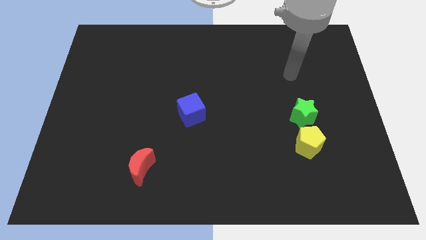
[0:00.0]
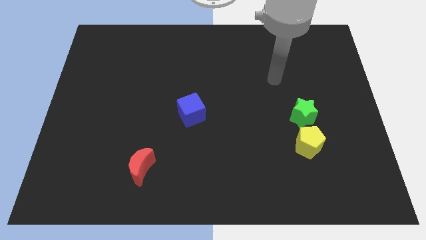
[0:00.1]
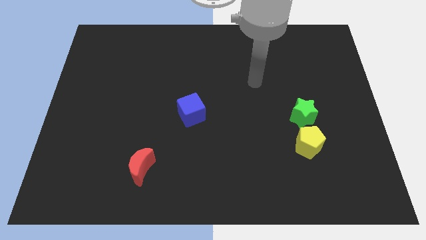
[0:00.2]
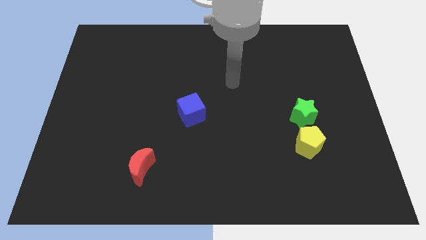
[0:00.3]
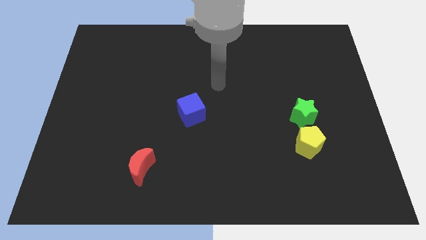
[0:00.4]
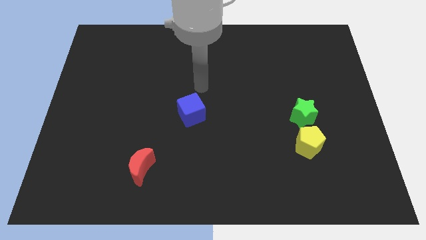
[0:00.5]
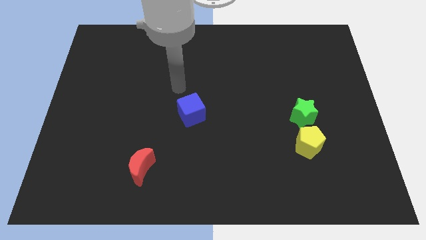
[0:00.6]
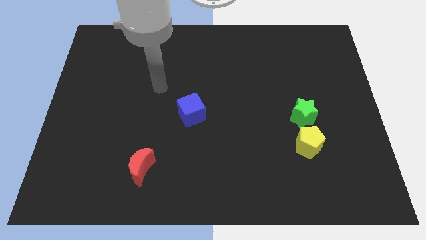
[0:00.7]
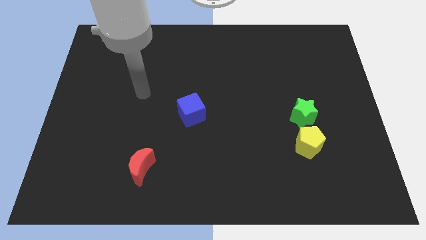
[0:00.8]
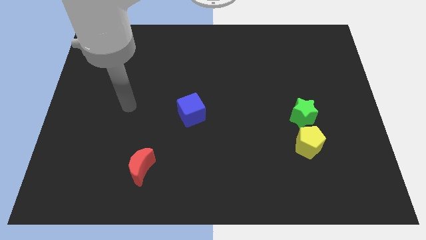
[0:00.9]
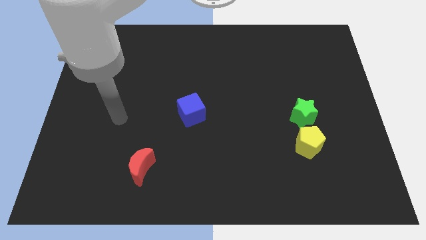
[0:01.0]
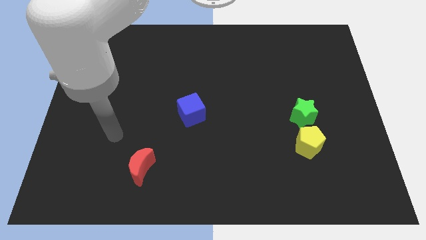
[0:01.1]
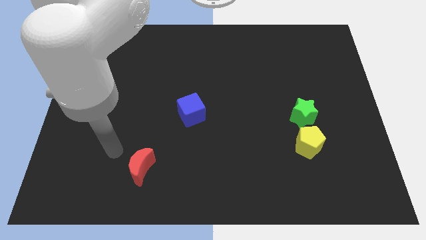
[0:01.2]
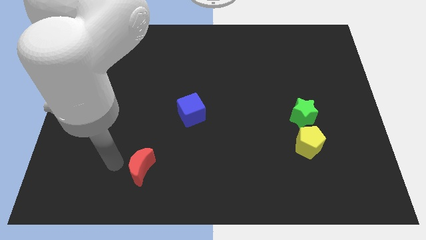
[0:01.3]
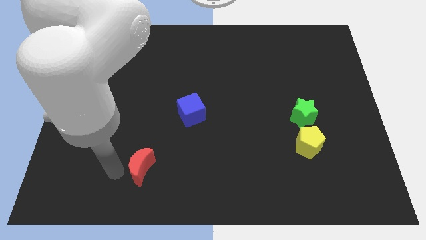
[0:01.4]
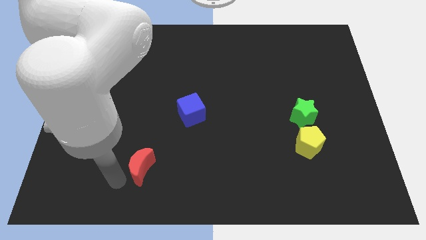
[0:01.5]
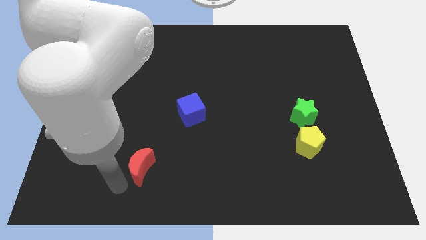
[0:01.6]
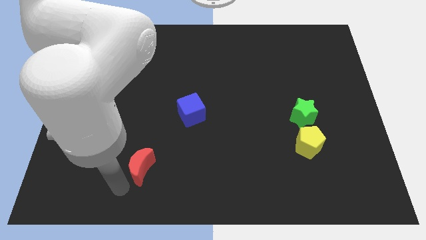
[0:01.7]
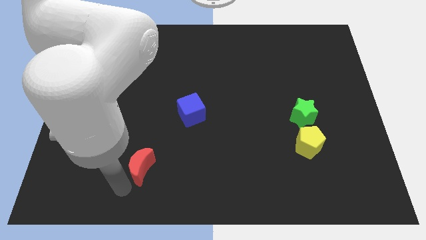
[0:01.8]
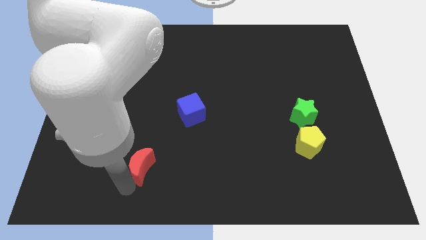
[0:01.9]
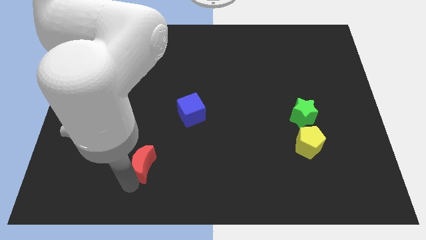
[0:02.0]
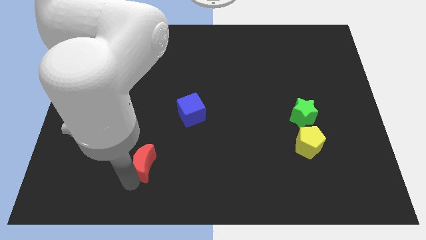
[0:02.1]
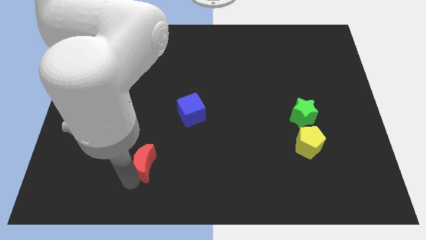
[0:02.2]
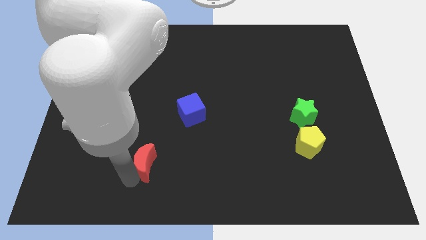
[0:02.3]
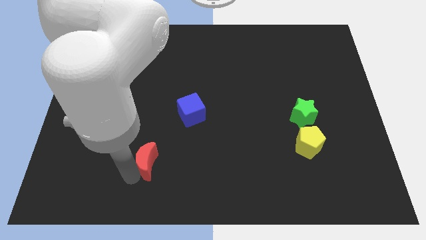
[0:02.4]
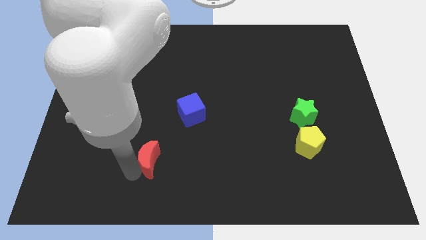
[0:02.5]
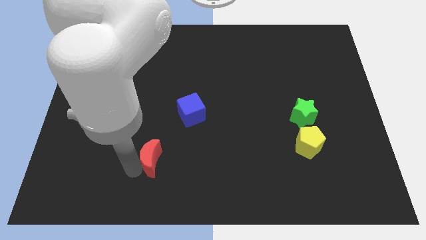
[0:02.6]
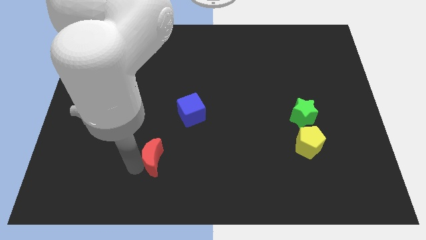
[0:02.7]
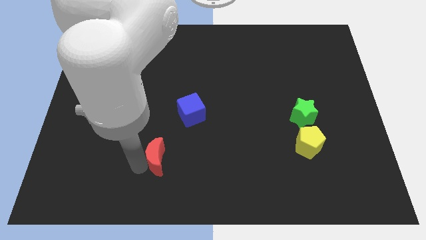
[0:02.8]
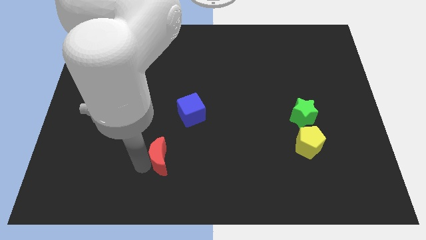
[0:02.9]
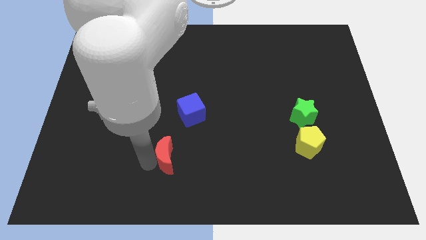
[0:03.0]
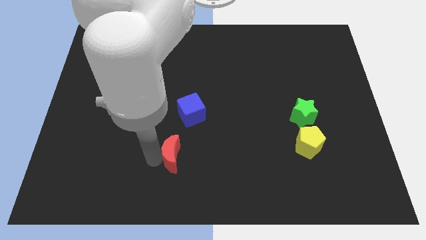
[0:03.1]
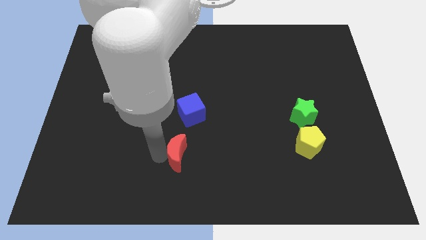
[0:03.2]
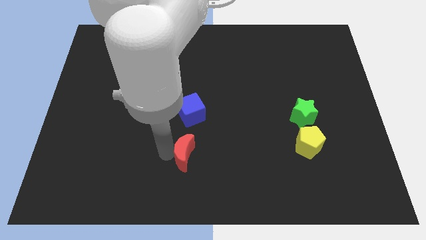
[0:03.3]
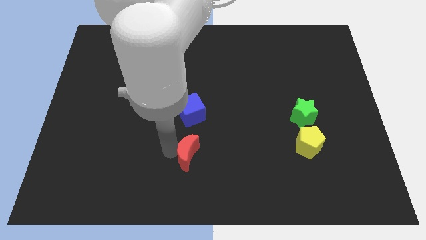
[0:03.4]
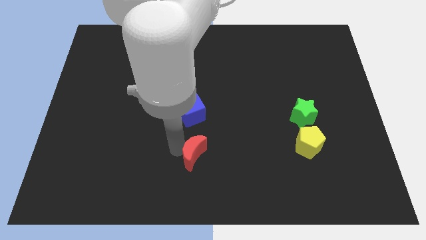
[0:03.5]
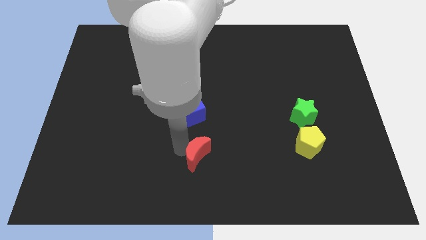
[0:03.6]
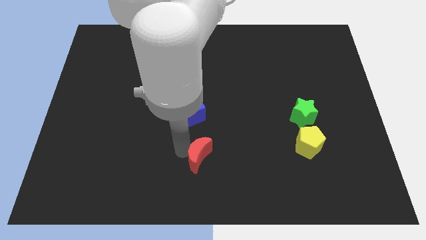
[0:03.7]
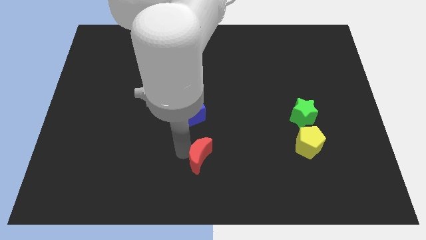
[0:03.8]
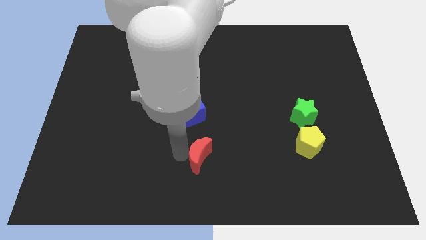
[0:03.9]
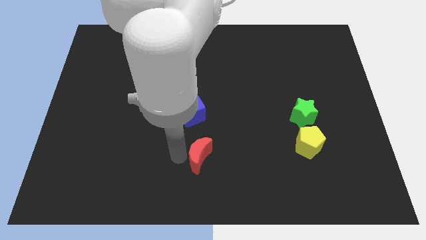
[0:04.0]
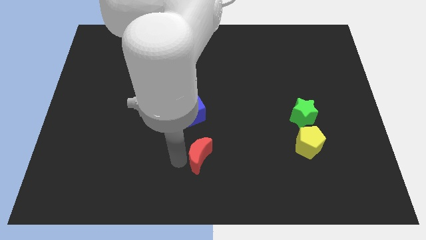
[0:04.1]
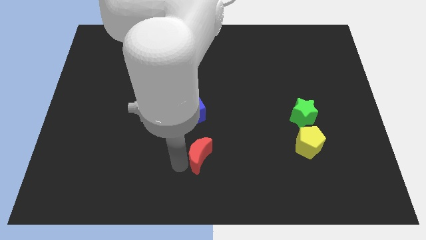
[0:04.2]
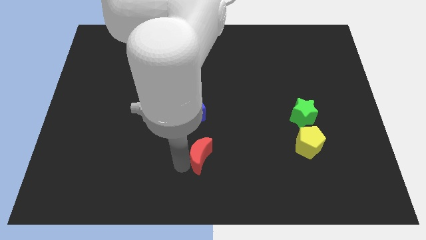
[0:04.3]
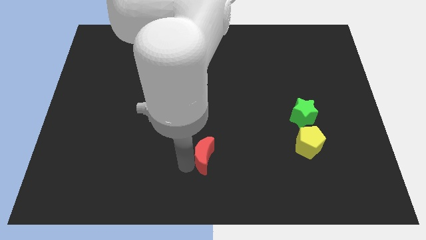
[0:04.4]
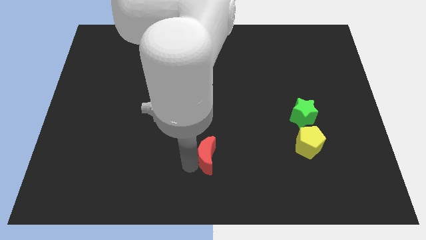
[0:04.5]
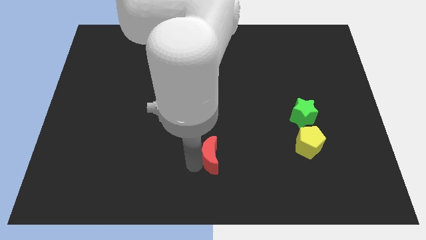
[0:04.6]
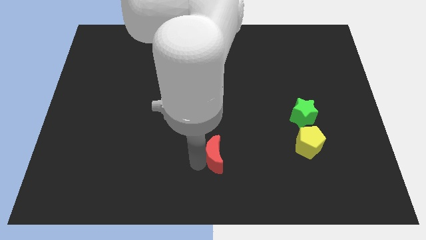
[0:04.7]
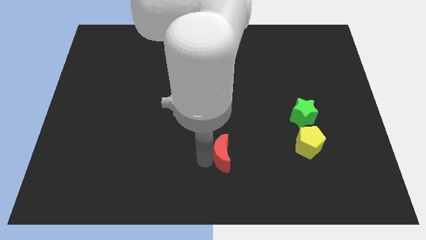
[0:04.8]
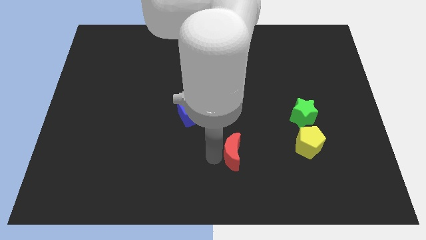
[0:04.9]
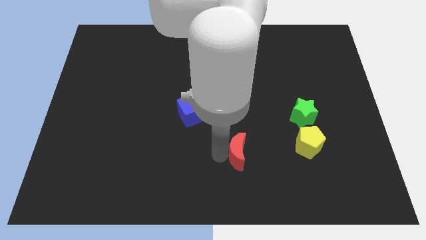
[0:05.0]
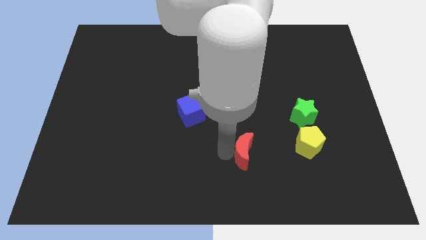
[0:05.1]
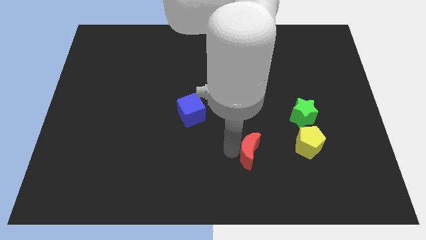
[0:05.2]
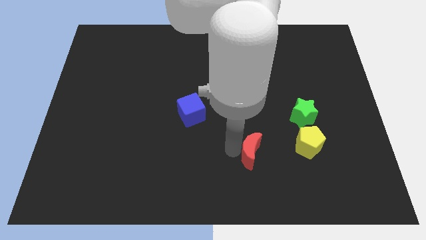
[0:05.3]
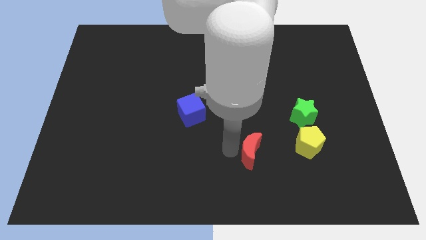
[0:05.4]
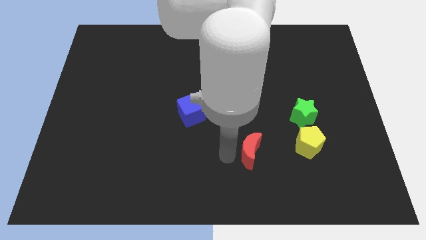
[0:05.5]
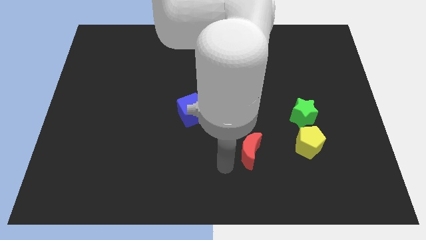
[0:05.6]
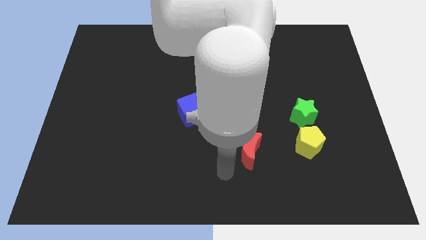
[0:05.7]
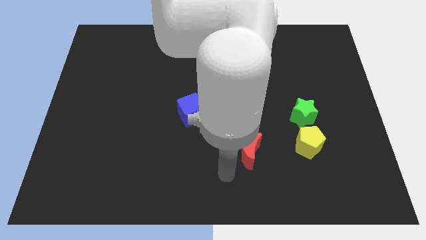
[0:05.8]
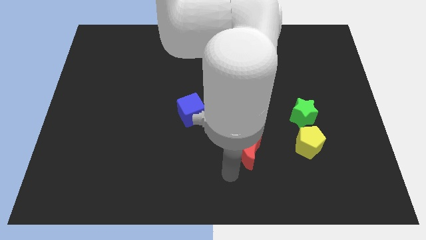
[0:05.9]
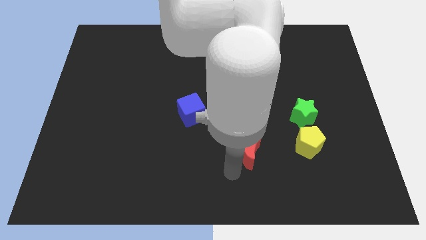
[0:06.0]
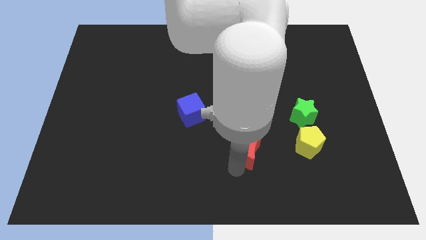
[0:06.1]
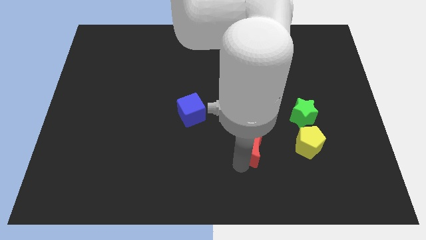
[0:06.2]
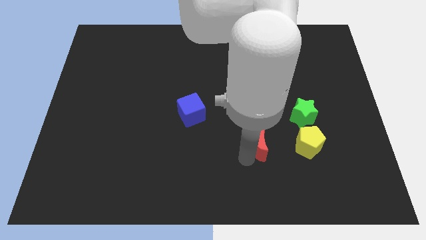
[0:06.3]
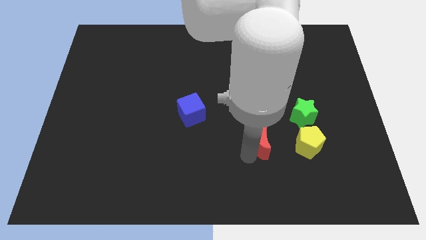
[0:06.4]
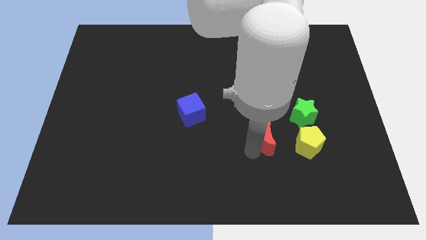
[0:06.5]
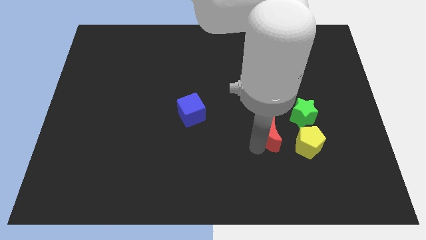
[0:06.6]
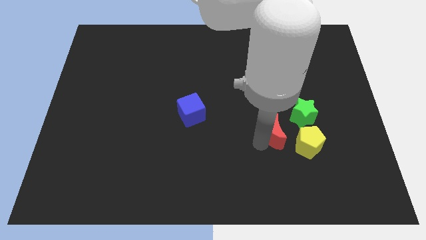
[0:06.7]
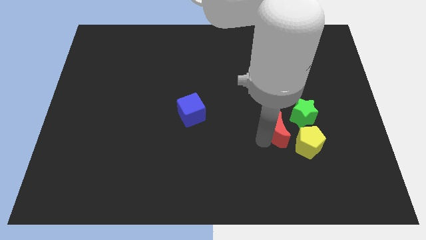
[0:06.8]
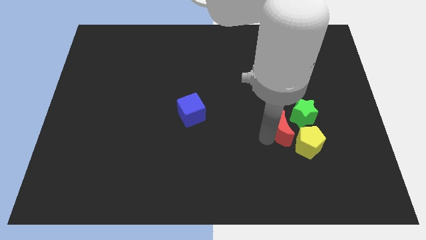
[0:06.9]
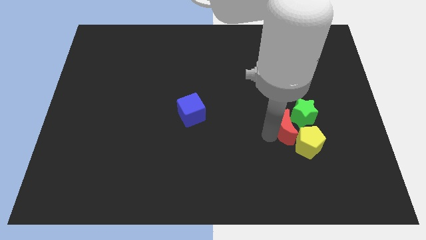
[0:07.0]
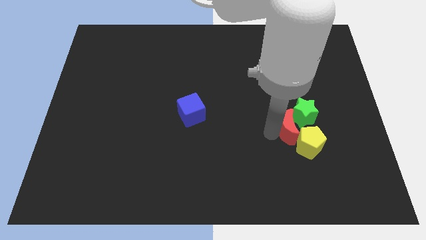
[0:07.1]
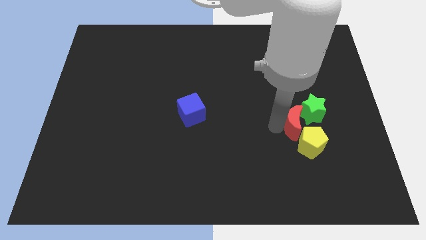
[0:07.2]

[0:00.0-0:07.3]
slide the red block close to the green block

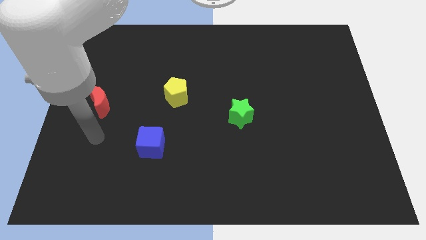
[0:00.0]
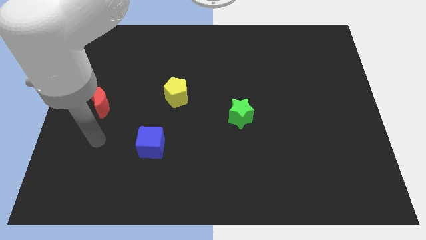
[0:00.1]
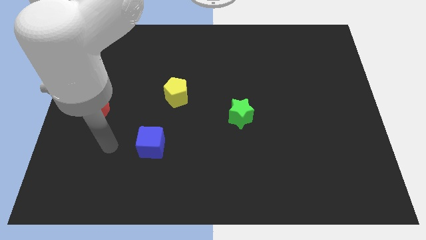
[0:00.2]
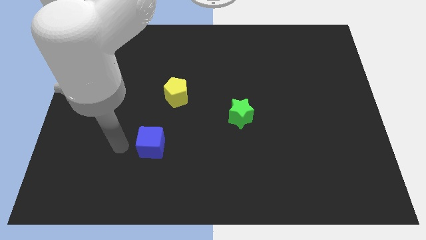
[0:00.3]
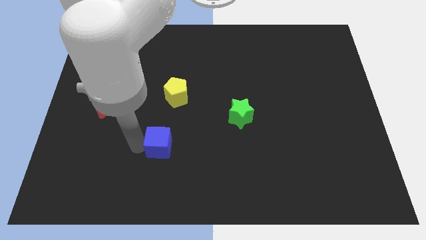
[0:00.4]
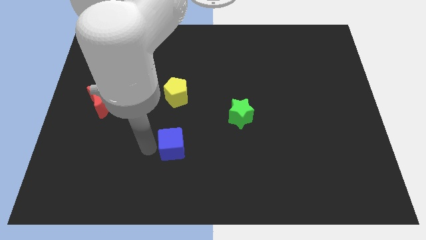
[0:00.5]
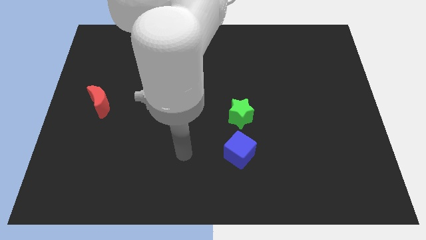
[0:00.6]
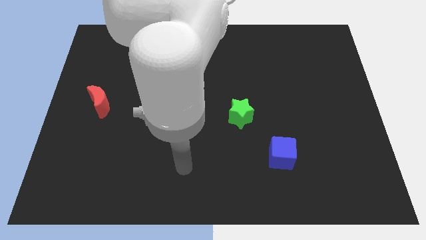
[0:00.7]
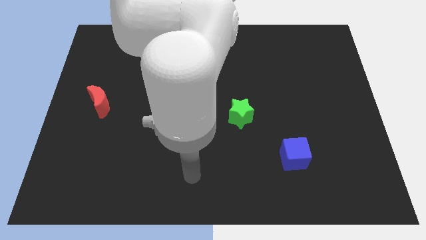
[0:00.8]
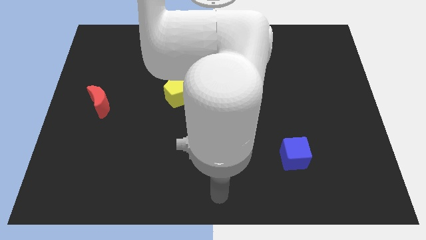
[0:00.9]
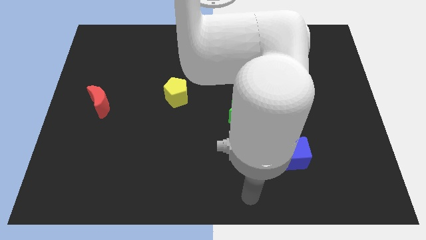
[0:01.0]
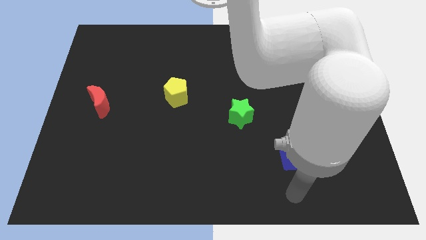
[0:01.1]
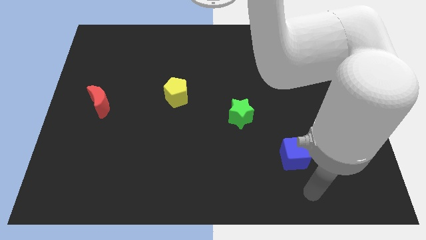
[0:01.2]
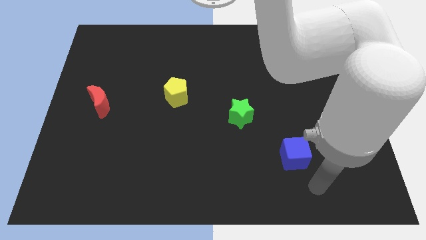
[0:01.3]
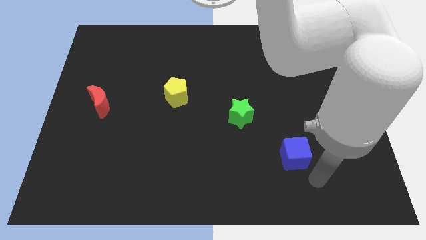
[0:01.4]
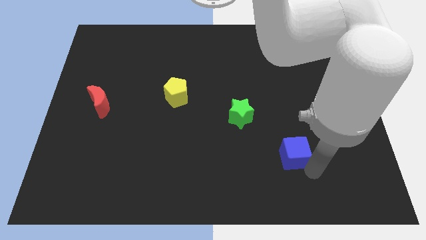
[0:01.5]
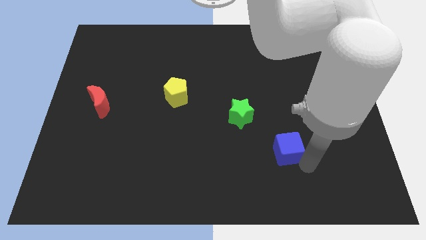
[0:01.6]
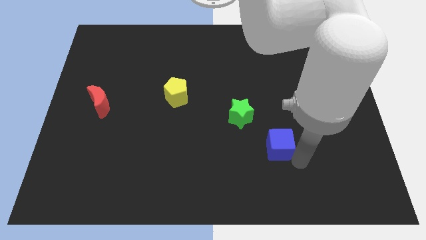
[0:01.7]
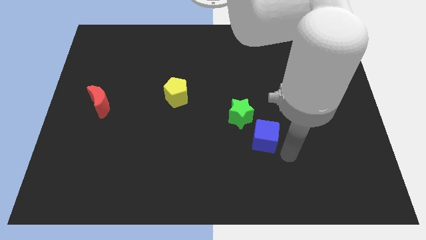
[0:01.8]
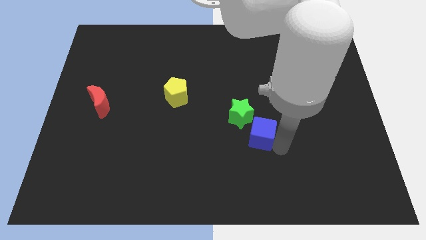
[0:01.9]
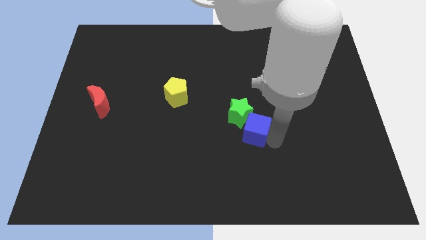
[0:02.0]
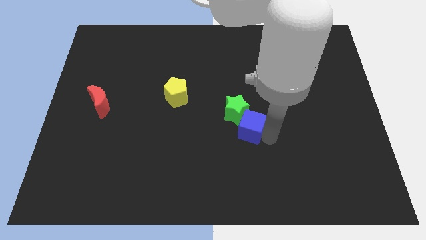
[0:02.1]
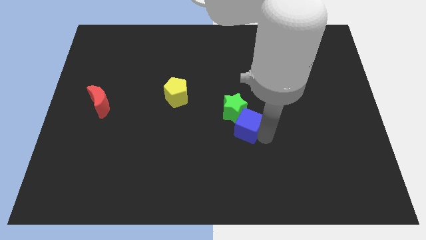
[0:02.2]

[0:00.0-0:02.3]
slide the cube towards the green star
